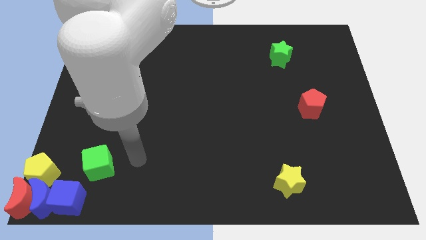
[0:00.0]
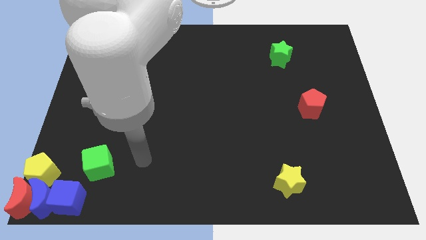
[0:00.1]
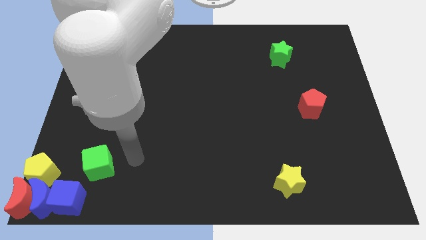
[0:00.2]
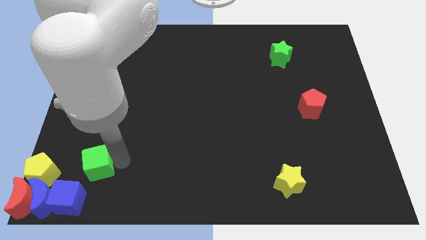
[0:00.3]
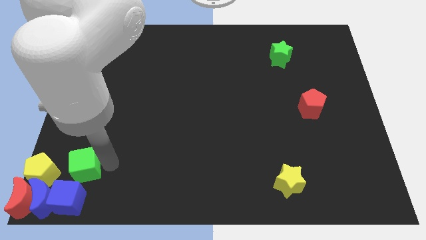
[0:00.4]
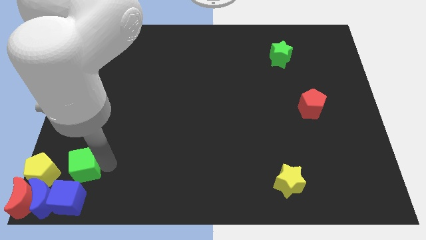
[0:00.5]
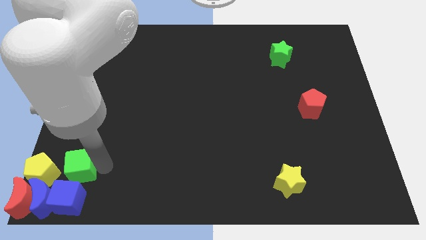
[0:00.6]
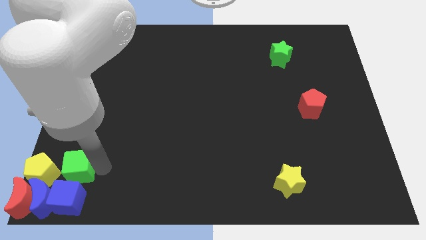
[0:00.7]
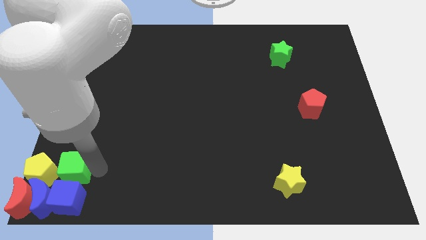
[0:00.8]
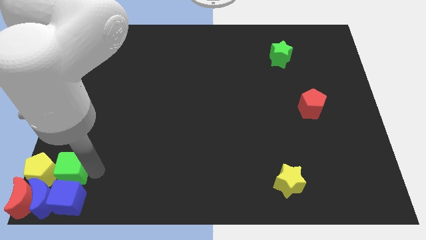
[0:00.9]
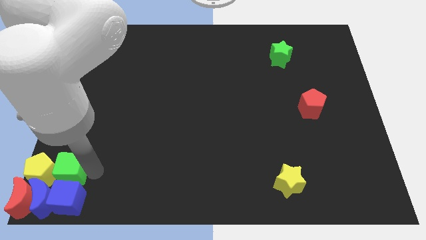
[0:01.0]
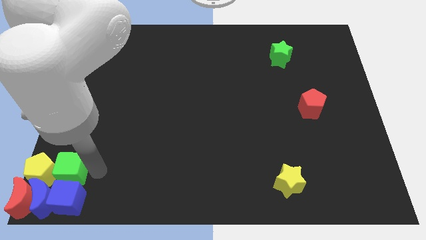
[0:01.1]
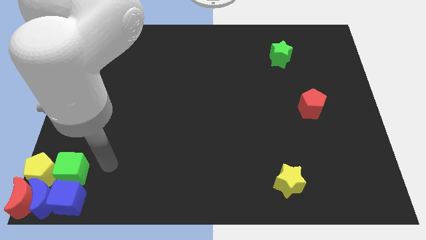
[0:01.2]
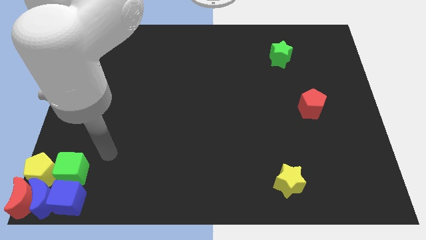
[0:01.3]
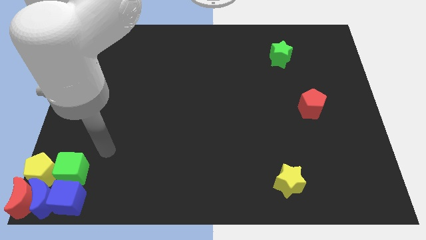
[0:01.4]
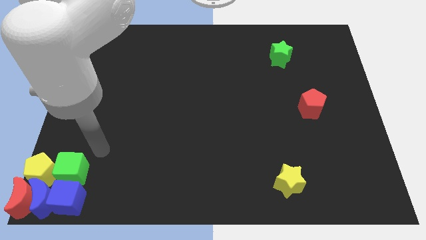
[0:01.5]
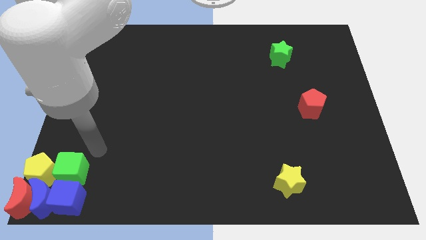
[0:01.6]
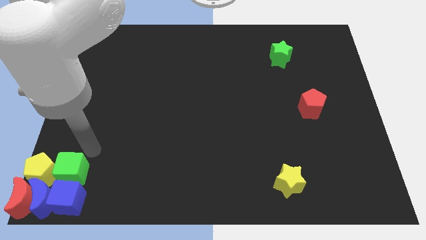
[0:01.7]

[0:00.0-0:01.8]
place the green square at the right side of the yellow pentagon

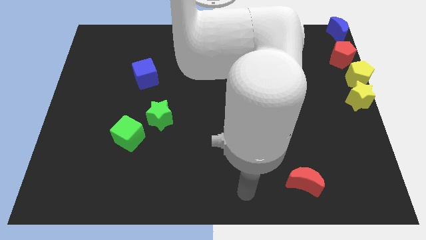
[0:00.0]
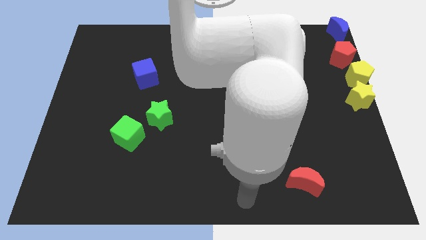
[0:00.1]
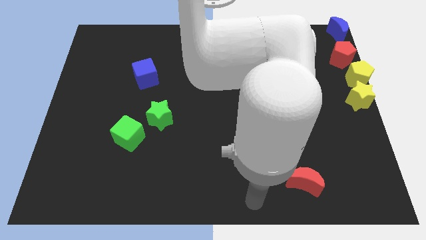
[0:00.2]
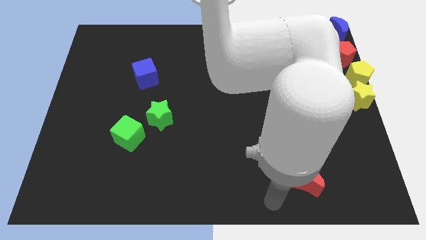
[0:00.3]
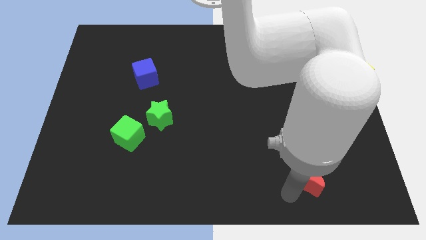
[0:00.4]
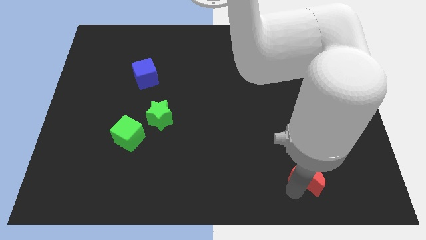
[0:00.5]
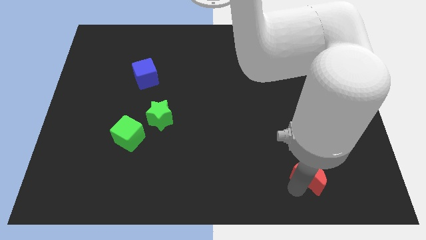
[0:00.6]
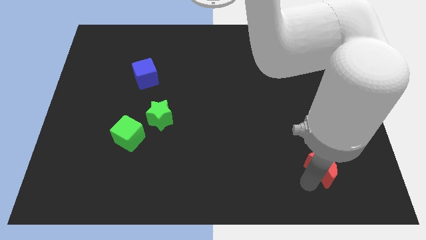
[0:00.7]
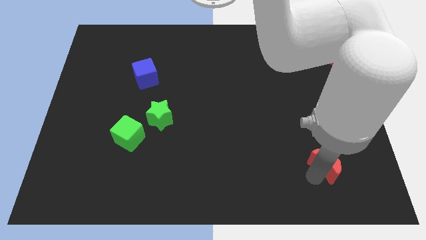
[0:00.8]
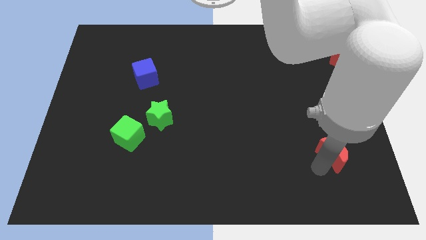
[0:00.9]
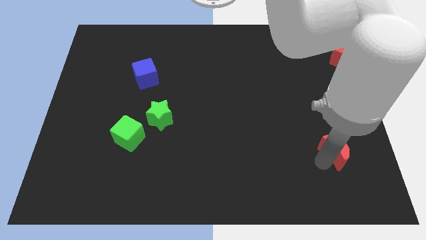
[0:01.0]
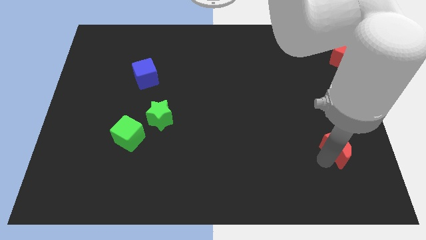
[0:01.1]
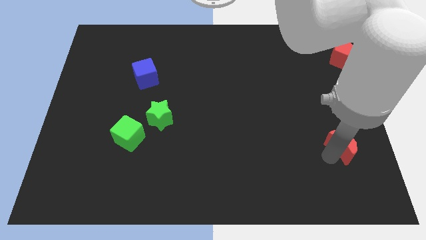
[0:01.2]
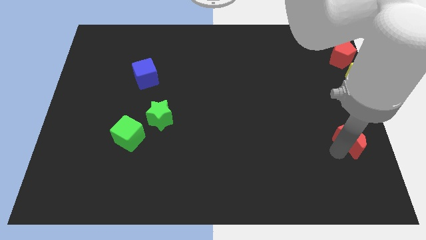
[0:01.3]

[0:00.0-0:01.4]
move the red crescent to the center right of the board

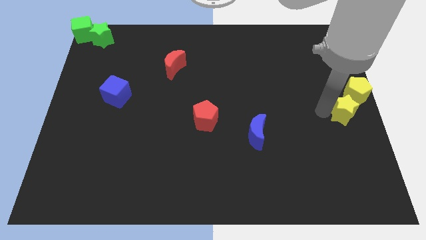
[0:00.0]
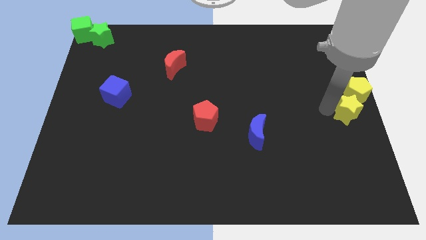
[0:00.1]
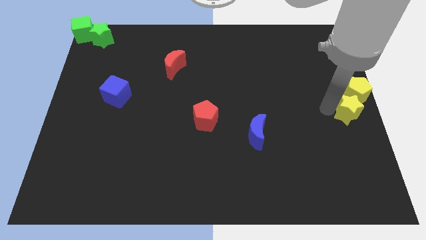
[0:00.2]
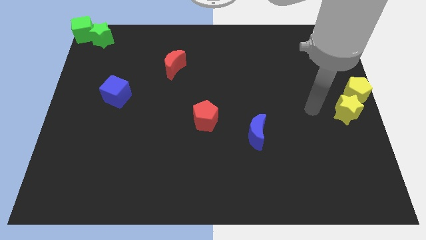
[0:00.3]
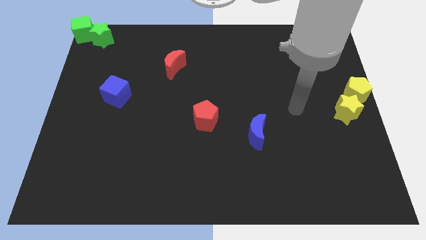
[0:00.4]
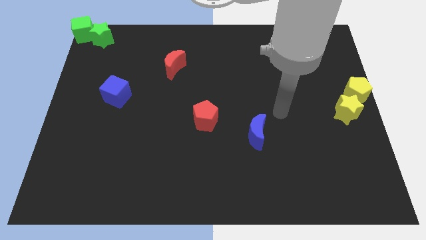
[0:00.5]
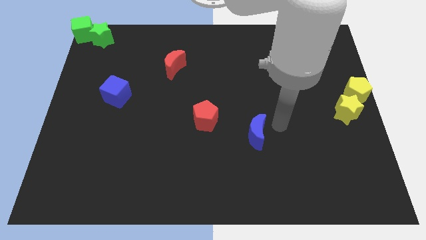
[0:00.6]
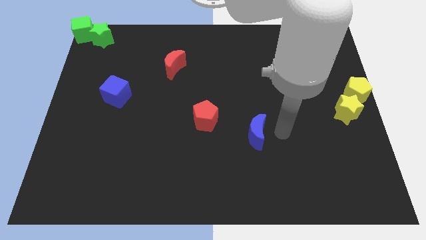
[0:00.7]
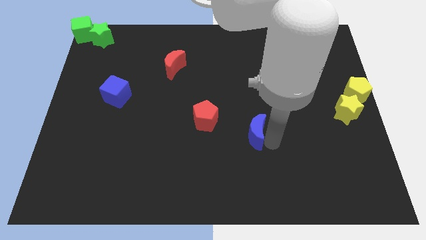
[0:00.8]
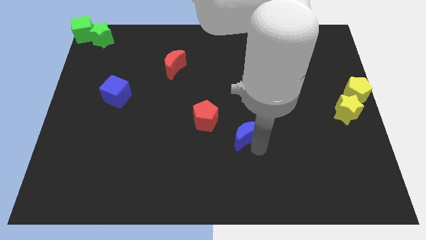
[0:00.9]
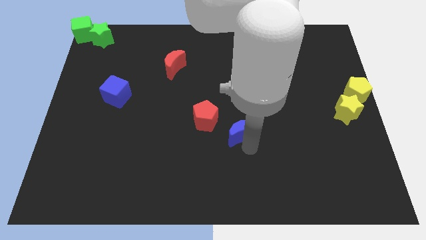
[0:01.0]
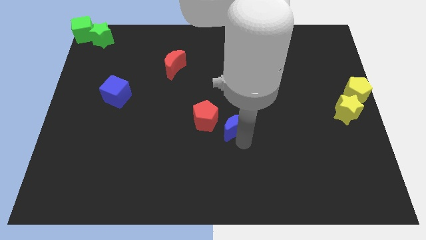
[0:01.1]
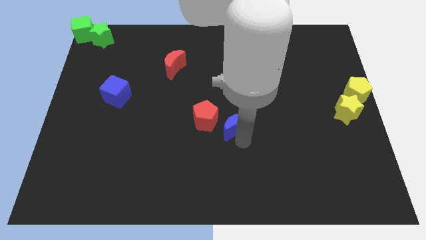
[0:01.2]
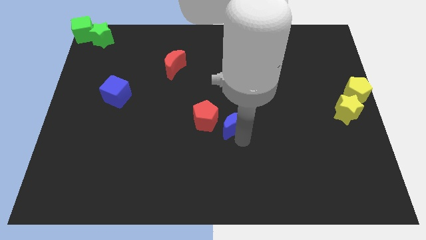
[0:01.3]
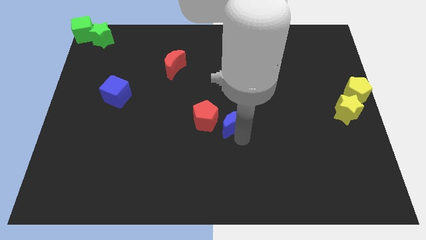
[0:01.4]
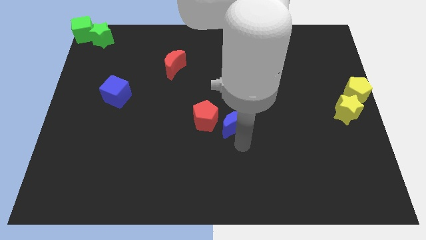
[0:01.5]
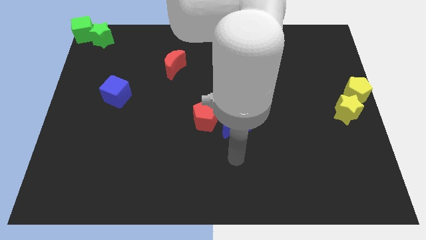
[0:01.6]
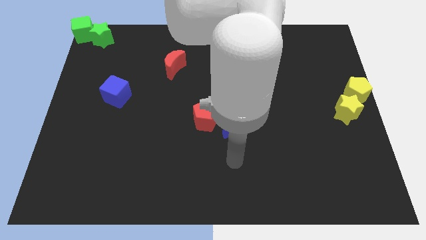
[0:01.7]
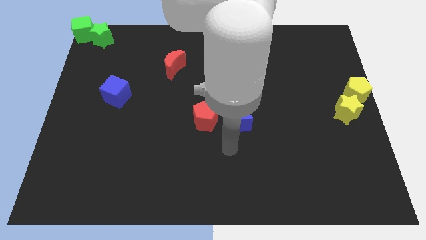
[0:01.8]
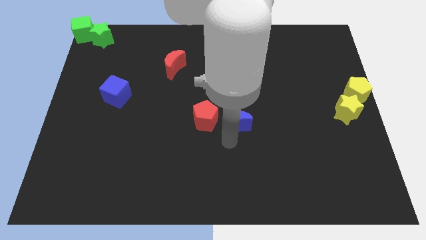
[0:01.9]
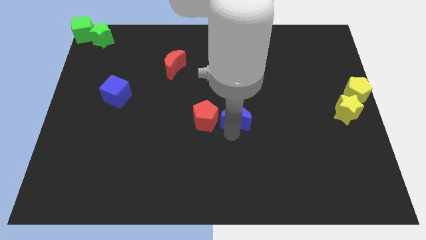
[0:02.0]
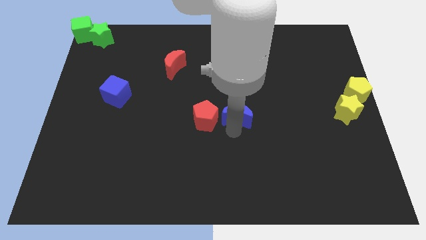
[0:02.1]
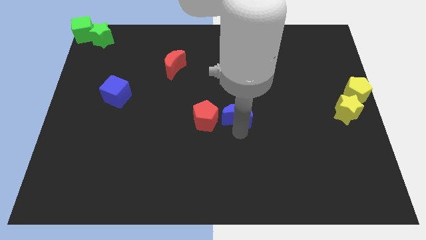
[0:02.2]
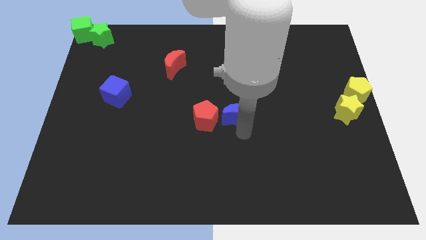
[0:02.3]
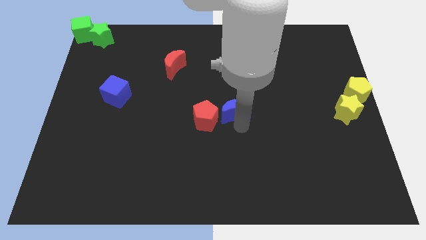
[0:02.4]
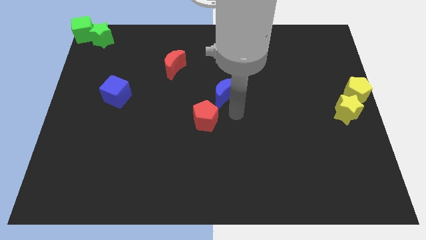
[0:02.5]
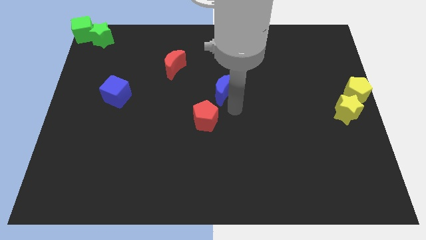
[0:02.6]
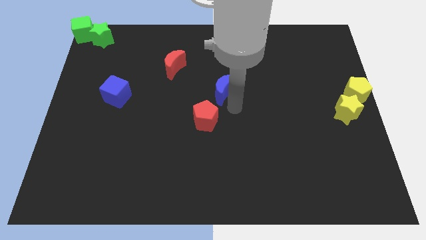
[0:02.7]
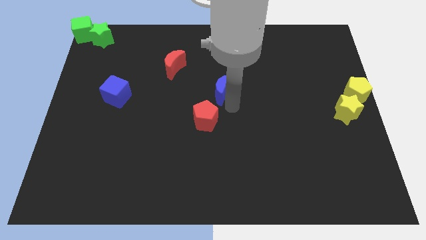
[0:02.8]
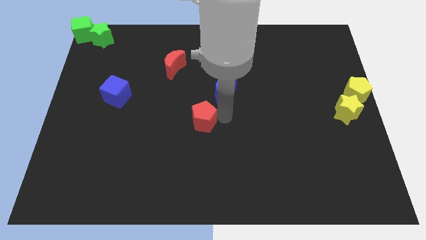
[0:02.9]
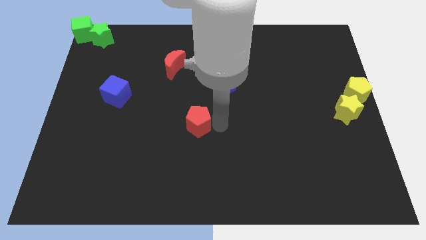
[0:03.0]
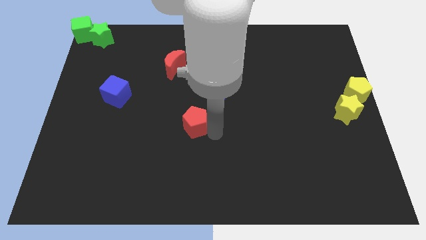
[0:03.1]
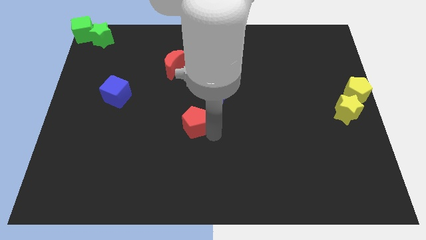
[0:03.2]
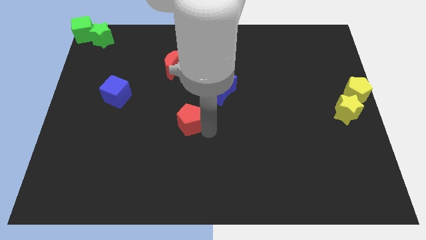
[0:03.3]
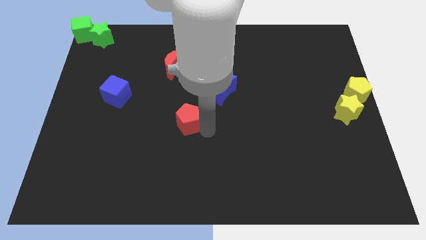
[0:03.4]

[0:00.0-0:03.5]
push blue moon to the centre of the board

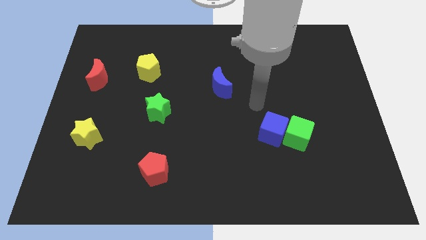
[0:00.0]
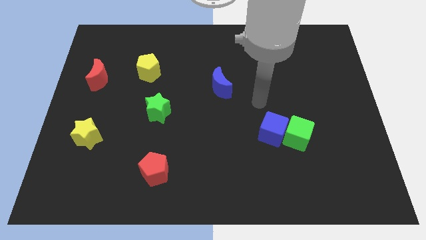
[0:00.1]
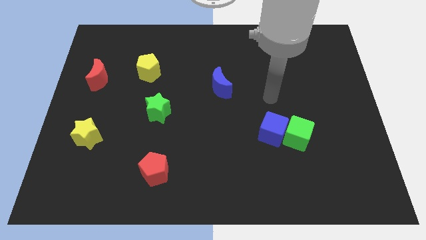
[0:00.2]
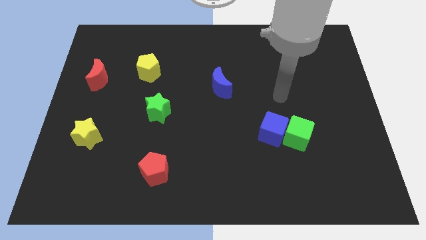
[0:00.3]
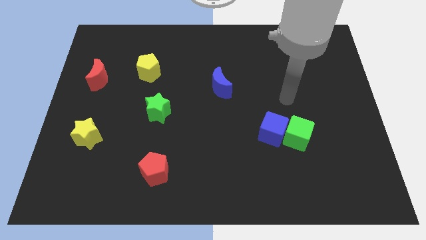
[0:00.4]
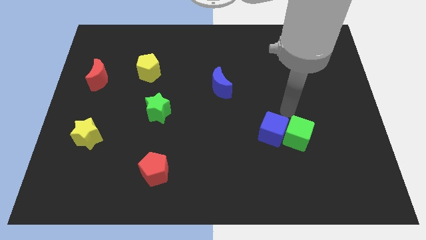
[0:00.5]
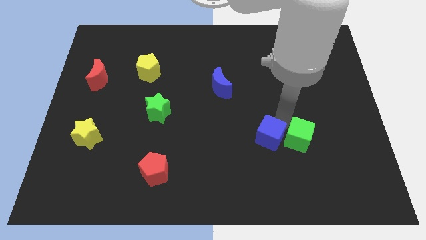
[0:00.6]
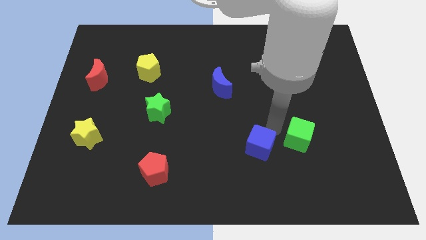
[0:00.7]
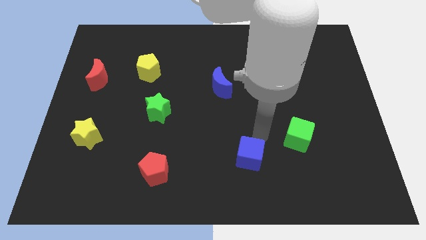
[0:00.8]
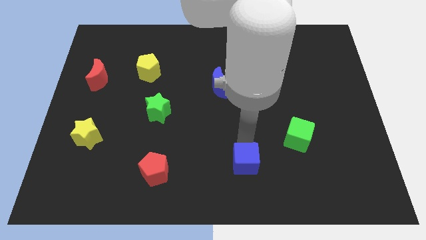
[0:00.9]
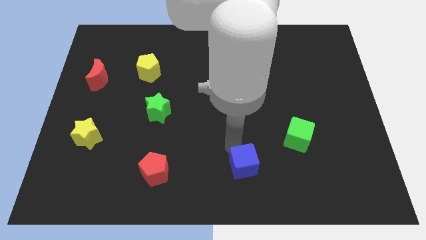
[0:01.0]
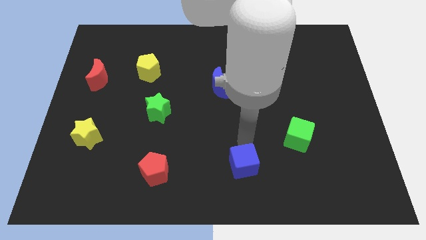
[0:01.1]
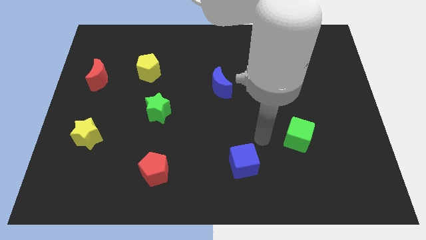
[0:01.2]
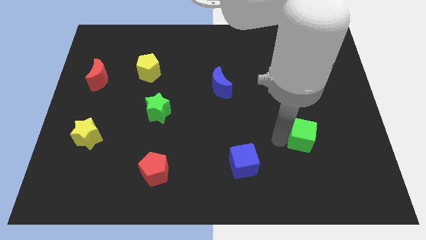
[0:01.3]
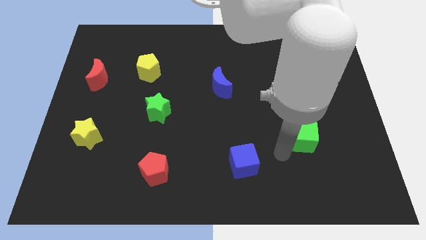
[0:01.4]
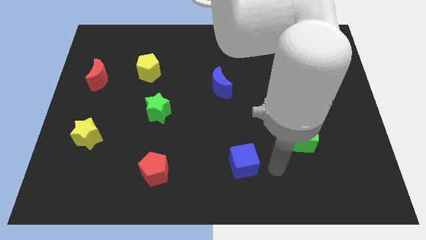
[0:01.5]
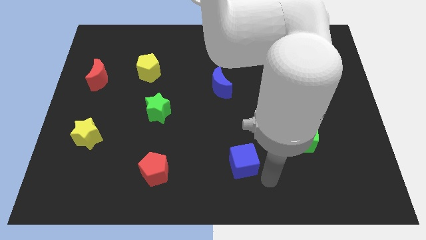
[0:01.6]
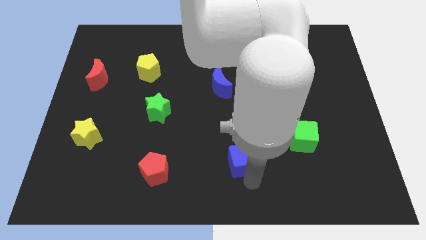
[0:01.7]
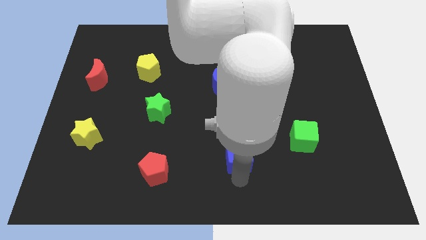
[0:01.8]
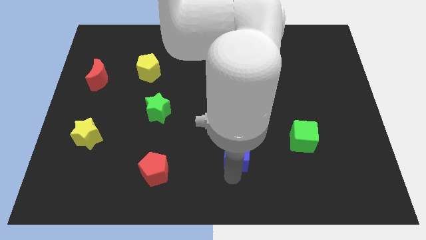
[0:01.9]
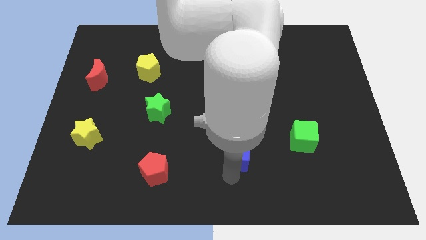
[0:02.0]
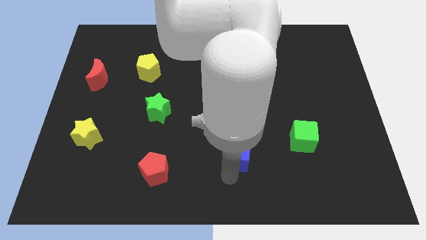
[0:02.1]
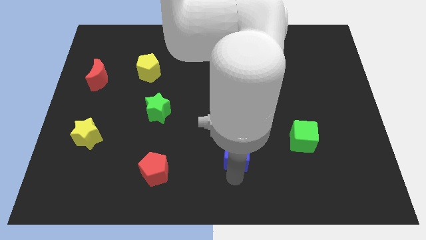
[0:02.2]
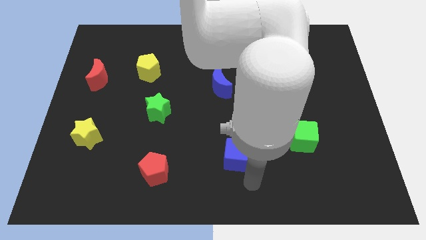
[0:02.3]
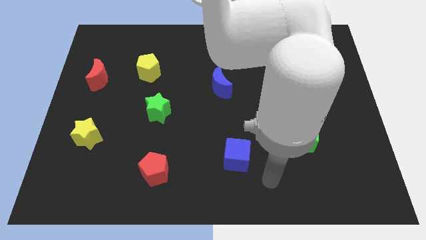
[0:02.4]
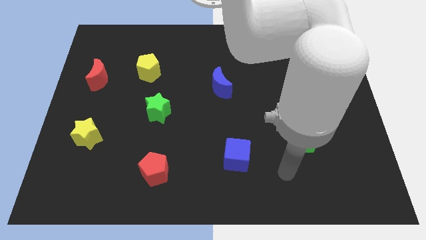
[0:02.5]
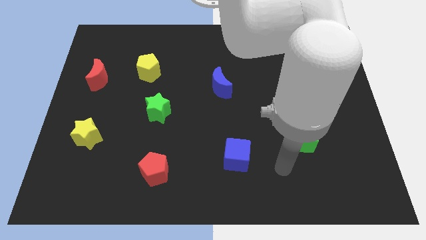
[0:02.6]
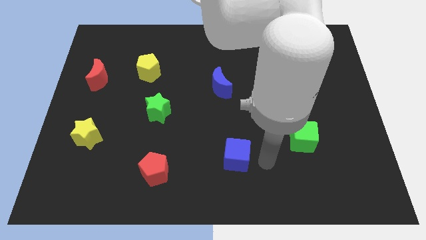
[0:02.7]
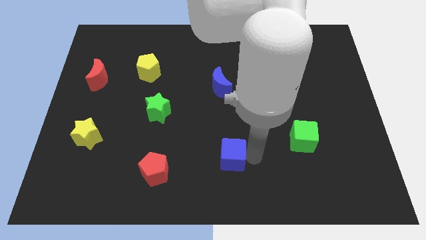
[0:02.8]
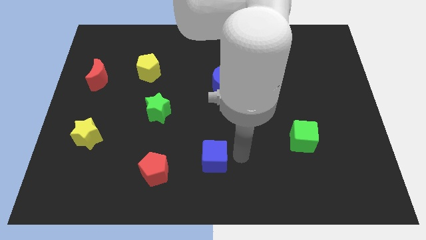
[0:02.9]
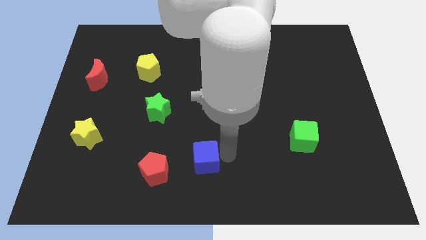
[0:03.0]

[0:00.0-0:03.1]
move the blue cube to the bottom center of the board
